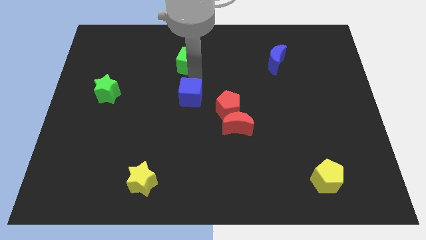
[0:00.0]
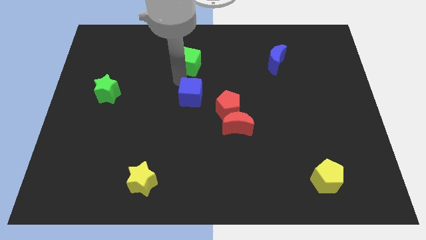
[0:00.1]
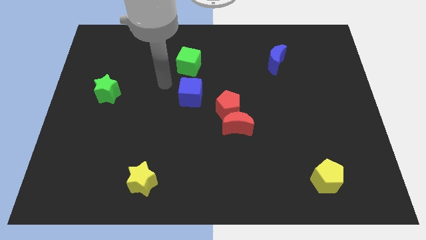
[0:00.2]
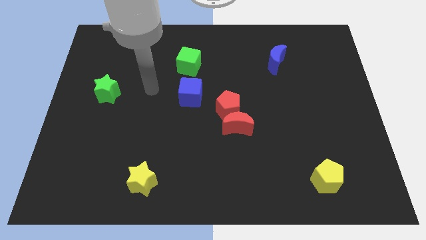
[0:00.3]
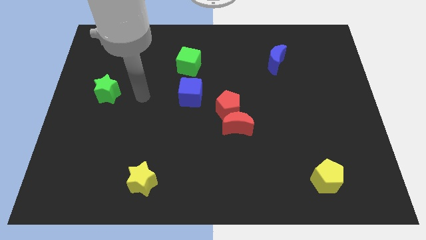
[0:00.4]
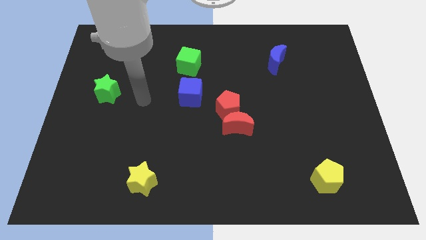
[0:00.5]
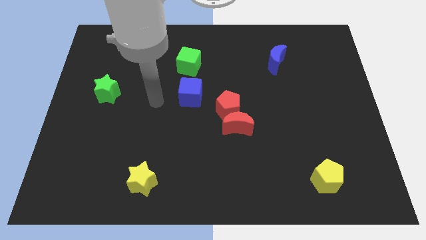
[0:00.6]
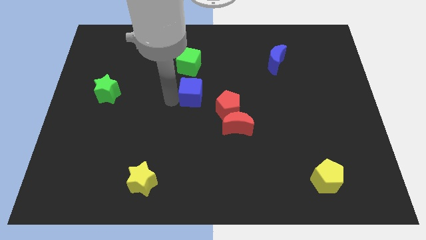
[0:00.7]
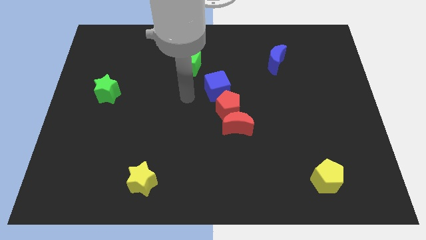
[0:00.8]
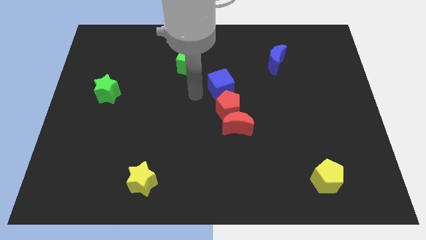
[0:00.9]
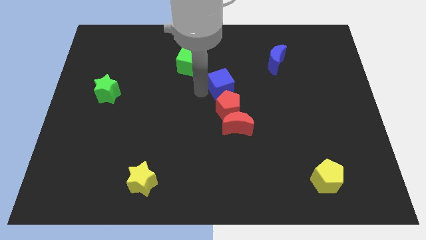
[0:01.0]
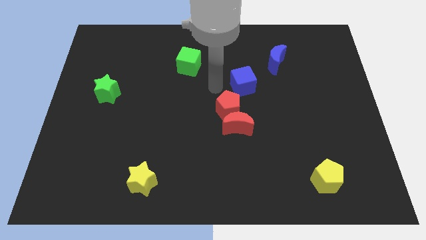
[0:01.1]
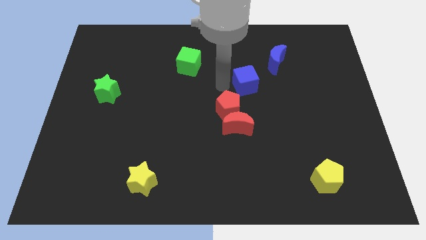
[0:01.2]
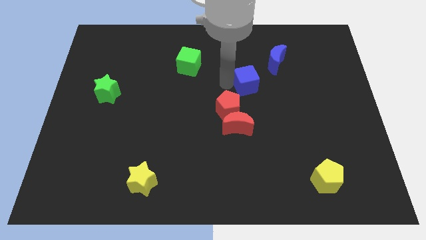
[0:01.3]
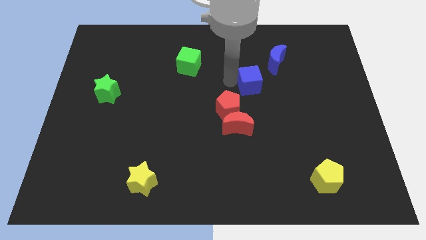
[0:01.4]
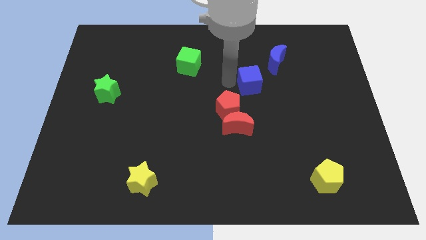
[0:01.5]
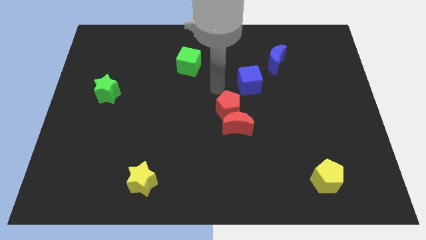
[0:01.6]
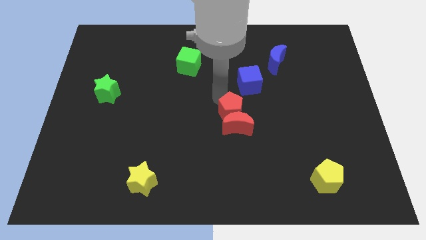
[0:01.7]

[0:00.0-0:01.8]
move the blue cube to left of blue crescent

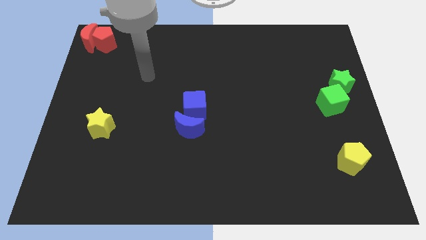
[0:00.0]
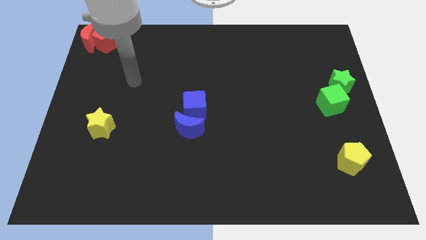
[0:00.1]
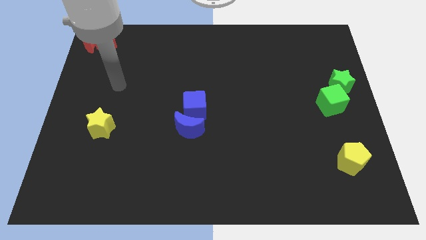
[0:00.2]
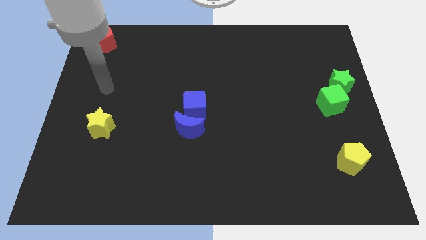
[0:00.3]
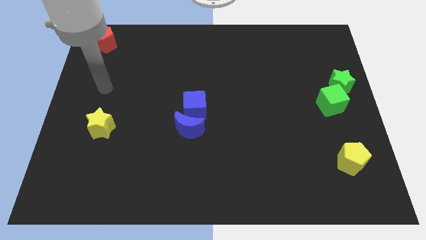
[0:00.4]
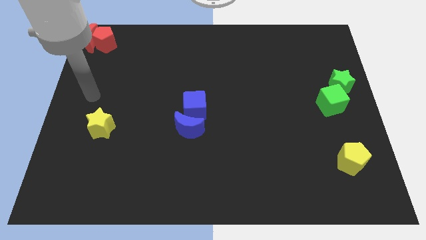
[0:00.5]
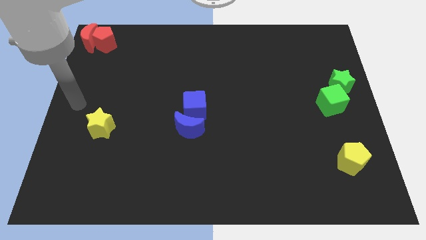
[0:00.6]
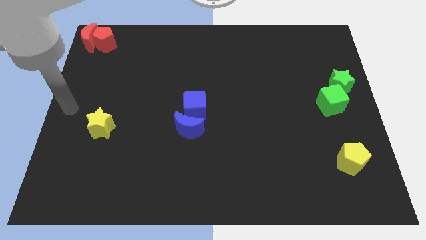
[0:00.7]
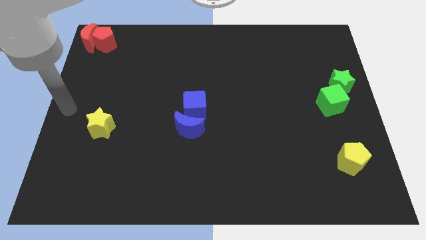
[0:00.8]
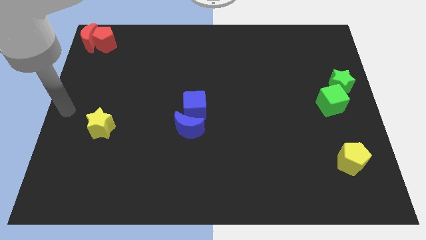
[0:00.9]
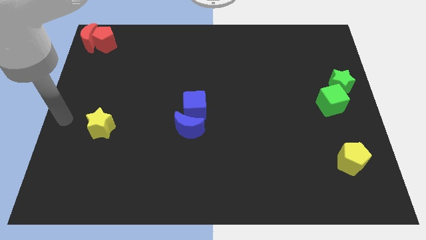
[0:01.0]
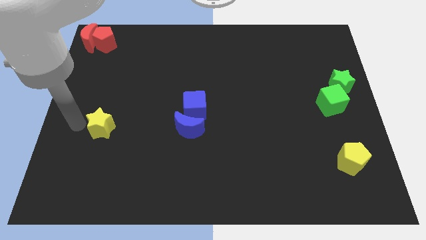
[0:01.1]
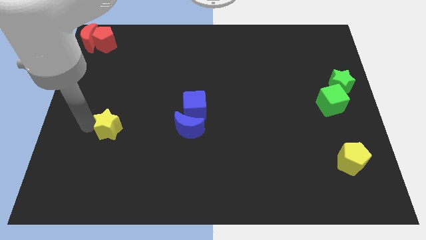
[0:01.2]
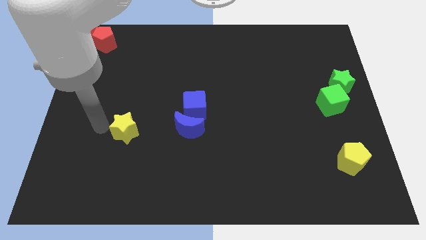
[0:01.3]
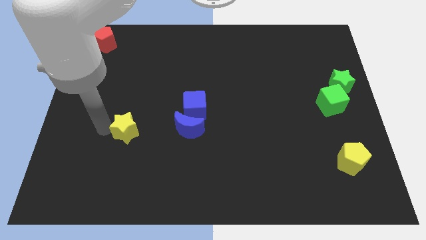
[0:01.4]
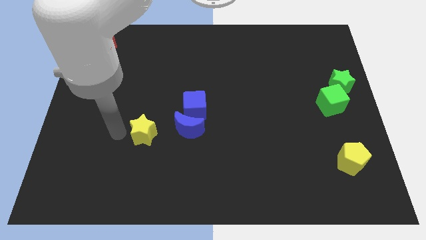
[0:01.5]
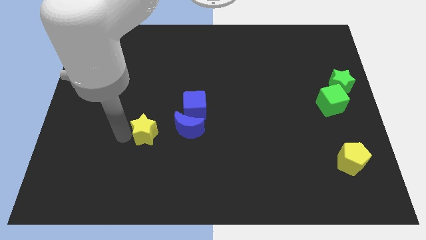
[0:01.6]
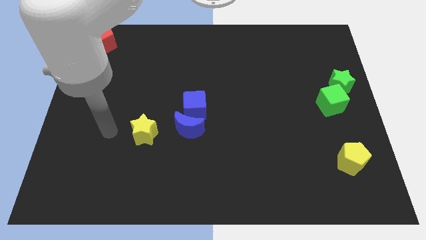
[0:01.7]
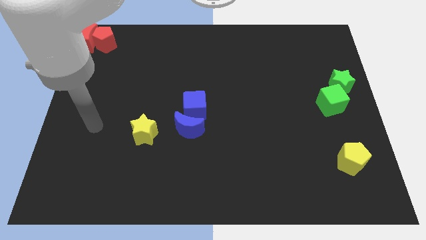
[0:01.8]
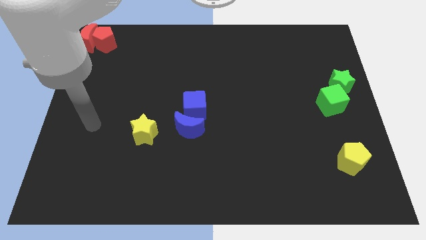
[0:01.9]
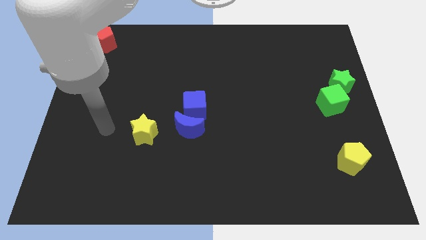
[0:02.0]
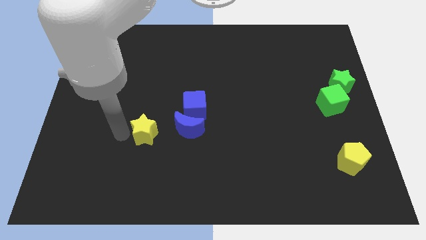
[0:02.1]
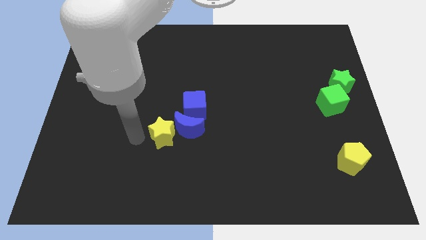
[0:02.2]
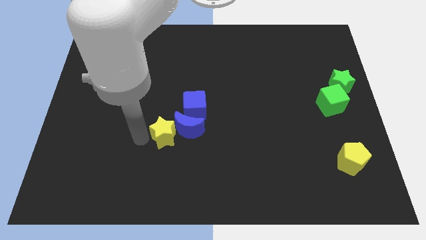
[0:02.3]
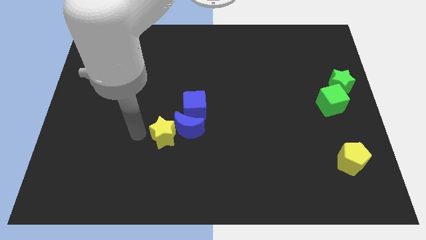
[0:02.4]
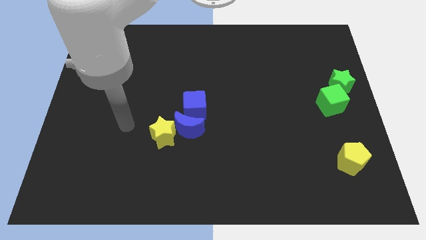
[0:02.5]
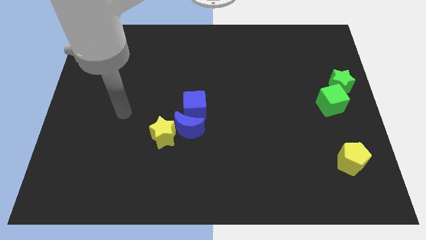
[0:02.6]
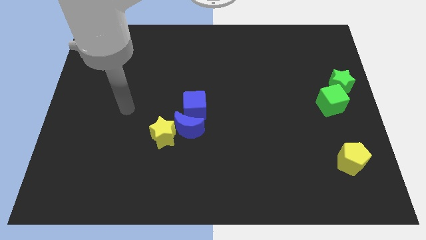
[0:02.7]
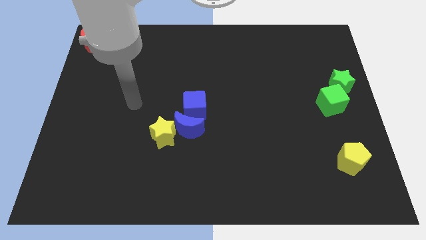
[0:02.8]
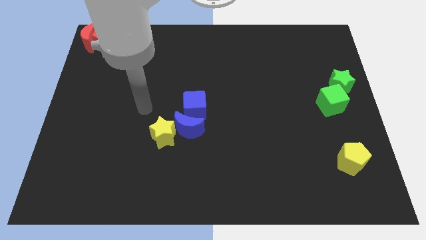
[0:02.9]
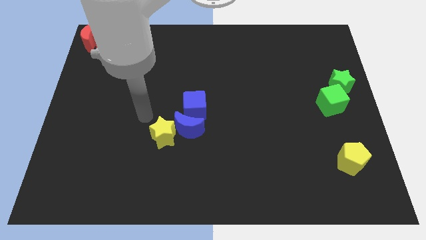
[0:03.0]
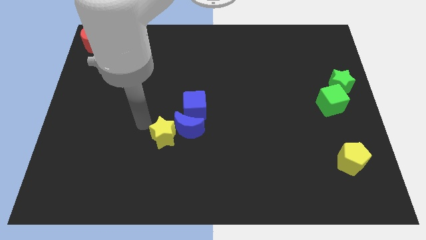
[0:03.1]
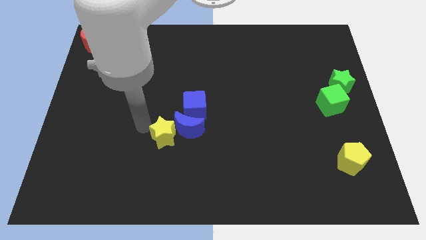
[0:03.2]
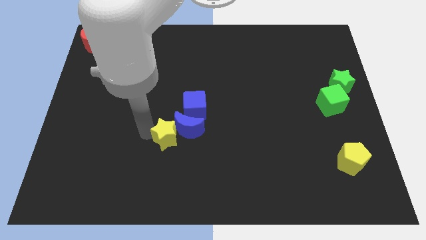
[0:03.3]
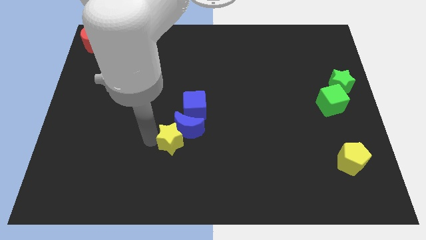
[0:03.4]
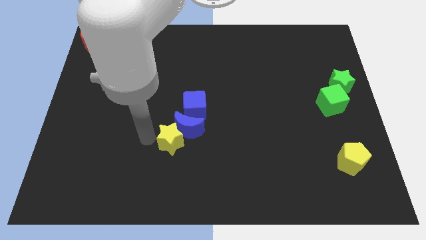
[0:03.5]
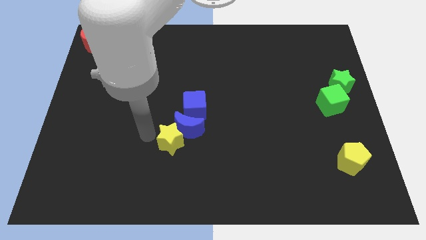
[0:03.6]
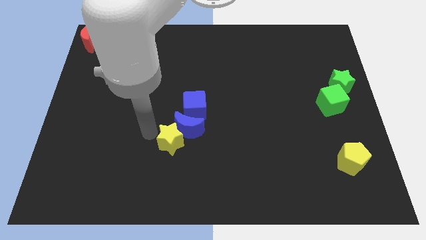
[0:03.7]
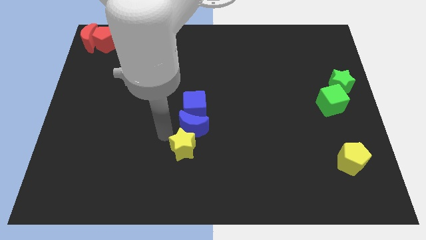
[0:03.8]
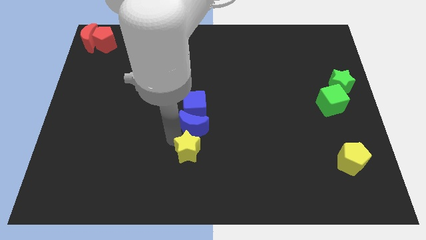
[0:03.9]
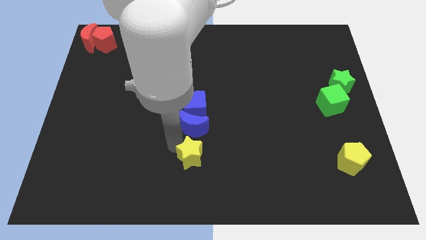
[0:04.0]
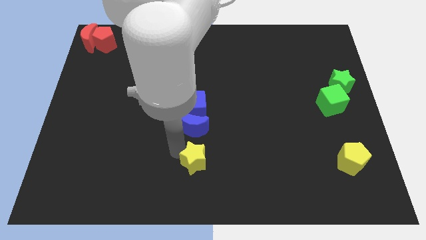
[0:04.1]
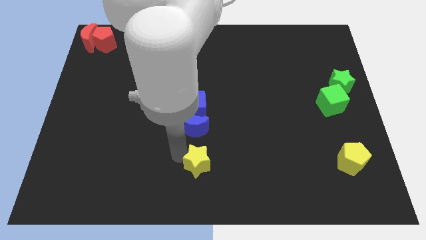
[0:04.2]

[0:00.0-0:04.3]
drag the yellow star vertically below the blue moon and blue cube

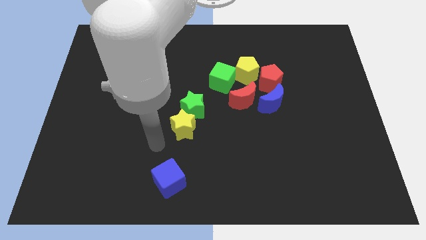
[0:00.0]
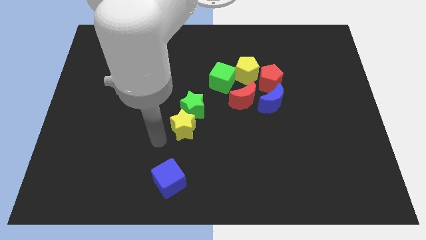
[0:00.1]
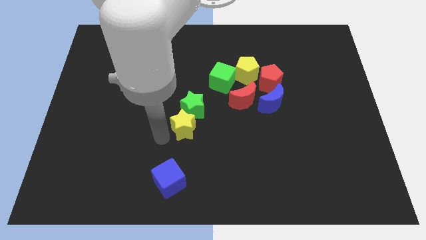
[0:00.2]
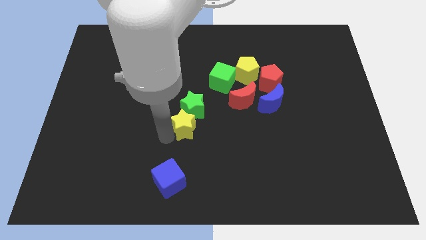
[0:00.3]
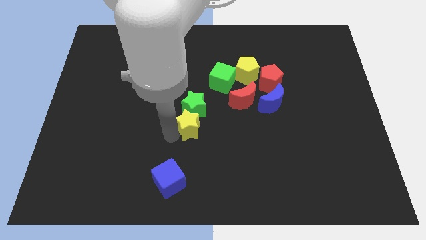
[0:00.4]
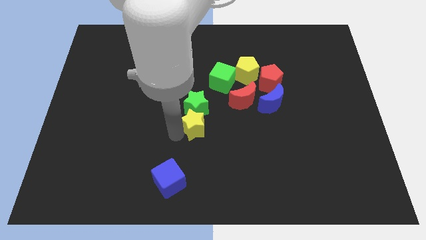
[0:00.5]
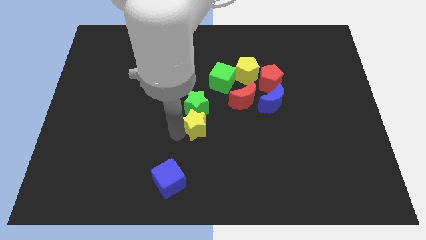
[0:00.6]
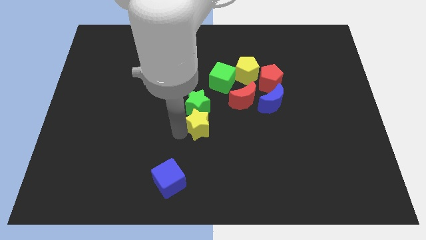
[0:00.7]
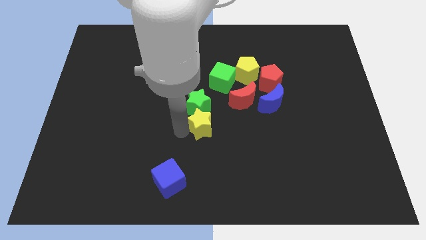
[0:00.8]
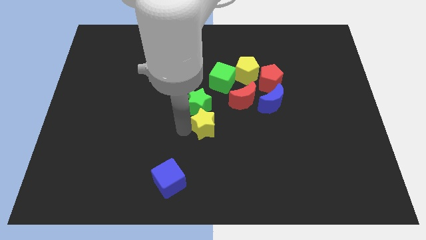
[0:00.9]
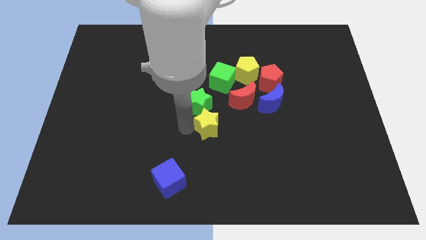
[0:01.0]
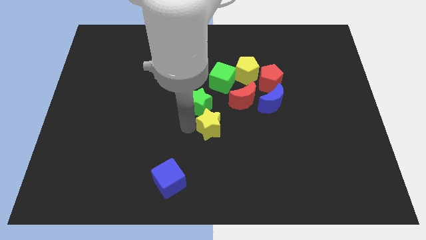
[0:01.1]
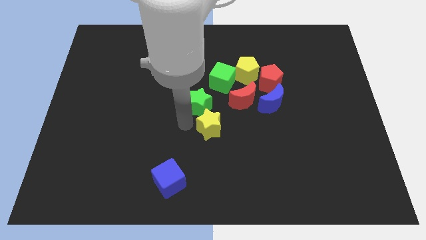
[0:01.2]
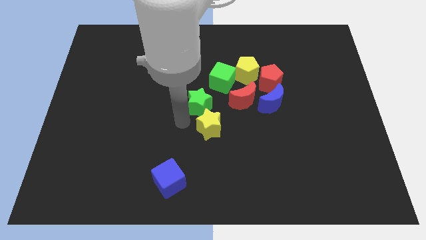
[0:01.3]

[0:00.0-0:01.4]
move the yellow star slightly to the right of the board

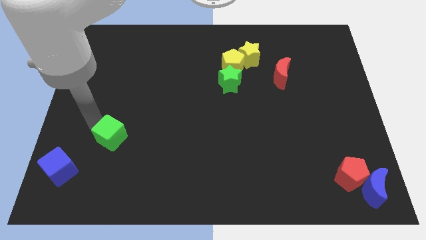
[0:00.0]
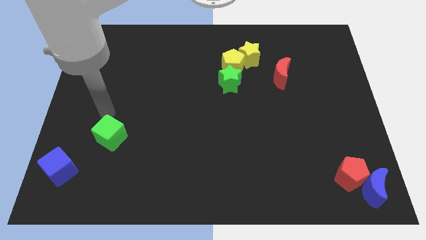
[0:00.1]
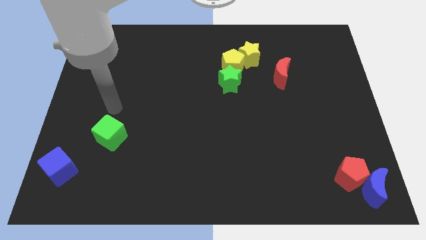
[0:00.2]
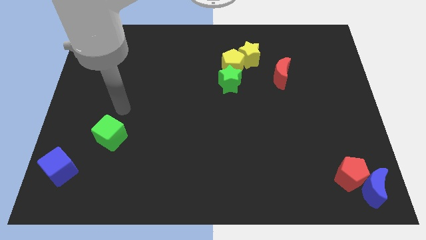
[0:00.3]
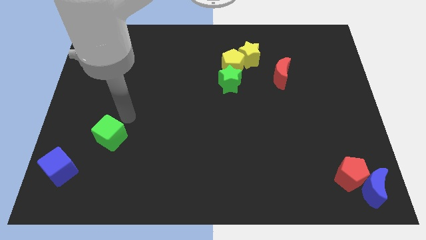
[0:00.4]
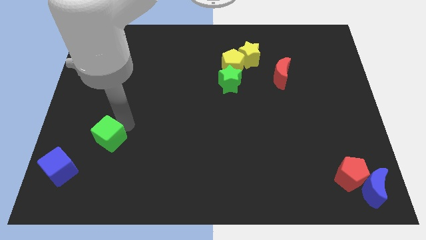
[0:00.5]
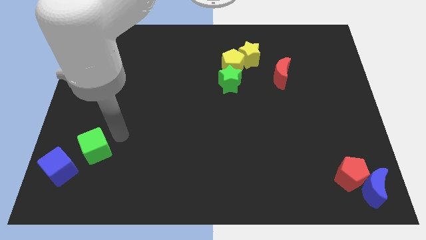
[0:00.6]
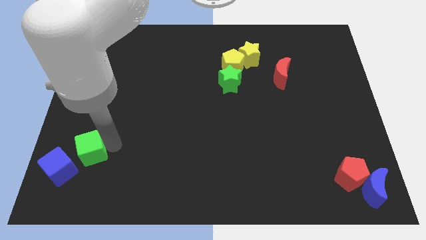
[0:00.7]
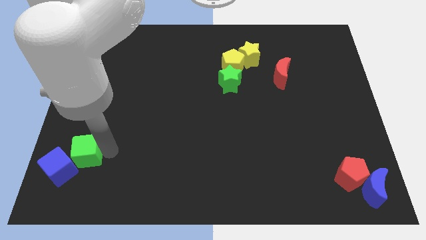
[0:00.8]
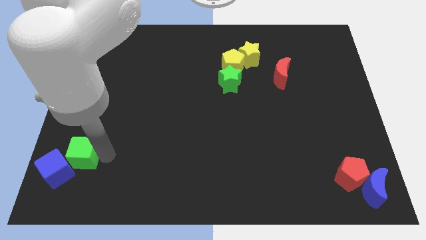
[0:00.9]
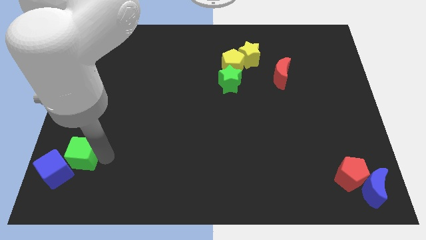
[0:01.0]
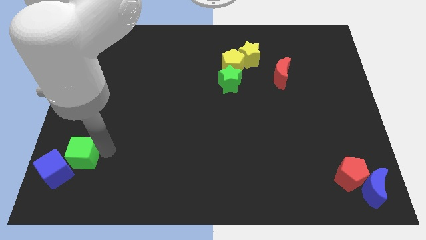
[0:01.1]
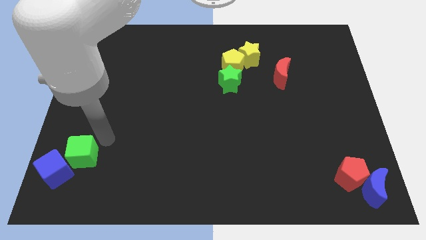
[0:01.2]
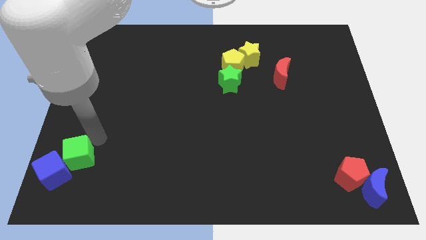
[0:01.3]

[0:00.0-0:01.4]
push the green cube into the blue cube

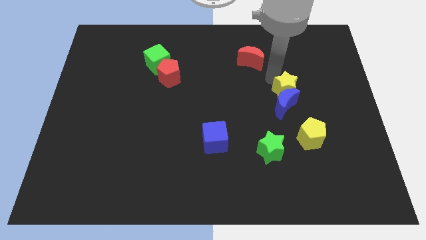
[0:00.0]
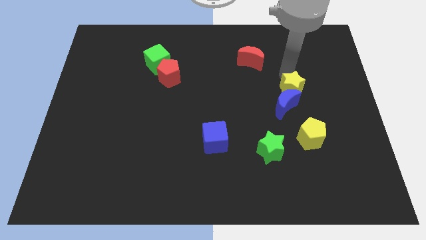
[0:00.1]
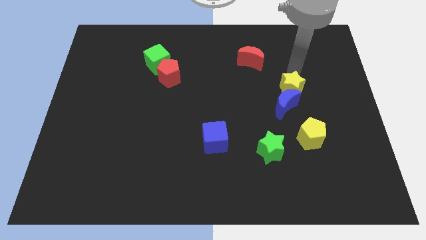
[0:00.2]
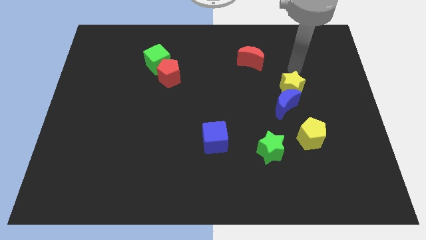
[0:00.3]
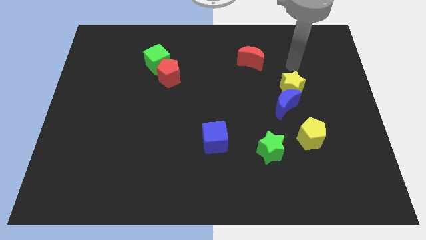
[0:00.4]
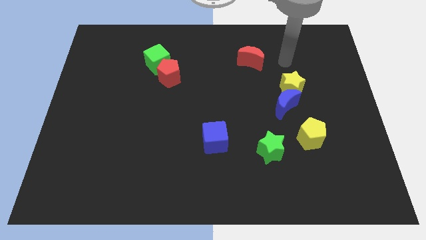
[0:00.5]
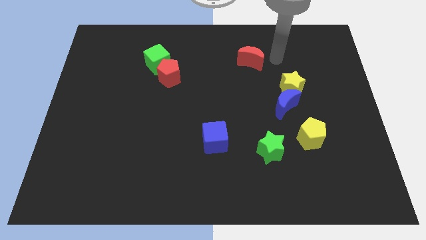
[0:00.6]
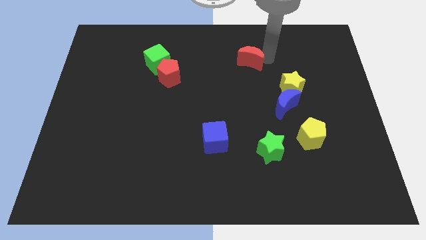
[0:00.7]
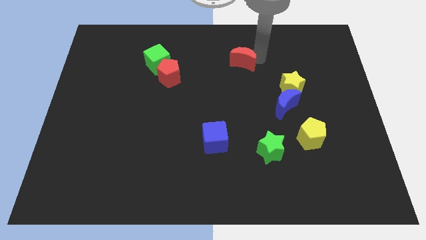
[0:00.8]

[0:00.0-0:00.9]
place the arm near the red moon
